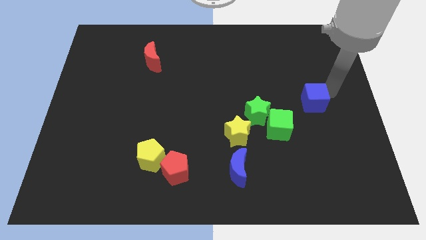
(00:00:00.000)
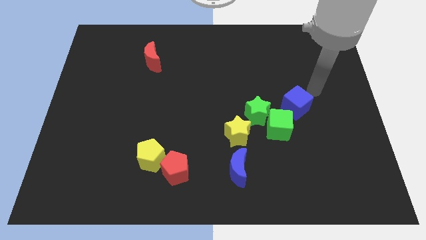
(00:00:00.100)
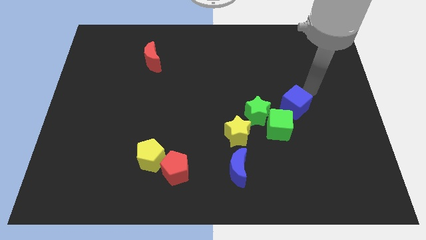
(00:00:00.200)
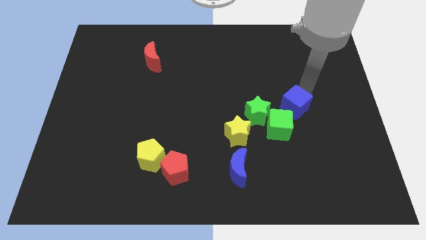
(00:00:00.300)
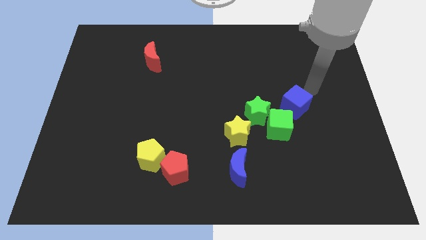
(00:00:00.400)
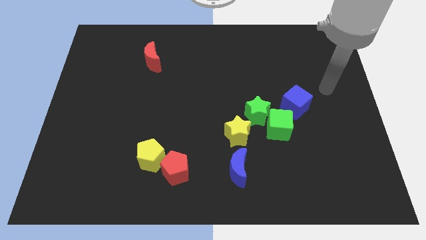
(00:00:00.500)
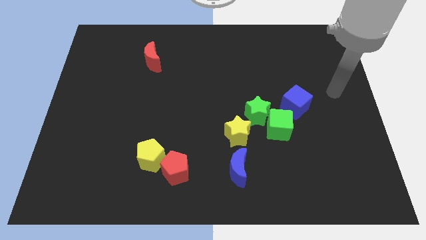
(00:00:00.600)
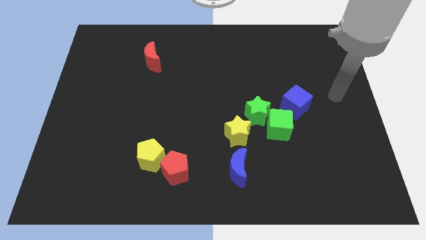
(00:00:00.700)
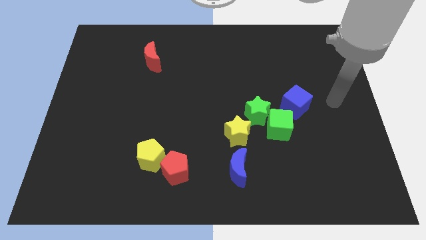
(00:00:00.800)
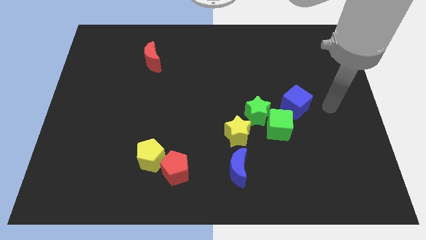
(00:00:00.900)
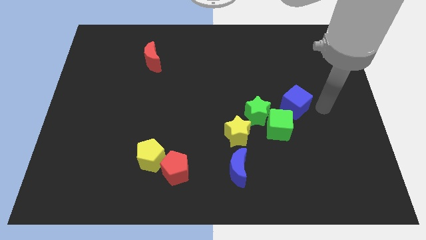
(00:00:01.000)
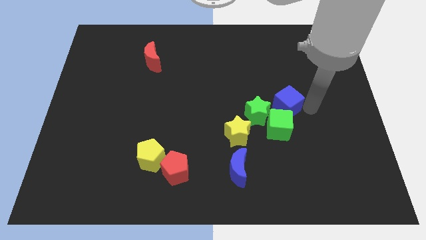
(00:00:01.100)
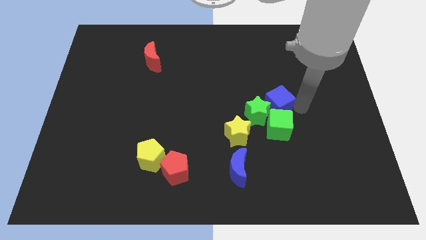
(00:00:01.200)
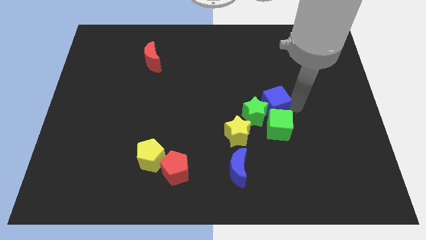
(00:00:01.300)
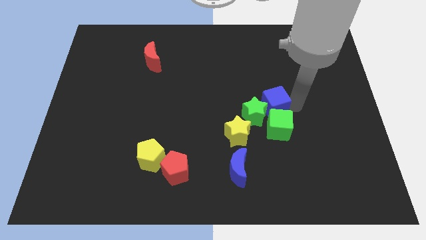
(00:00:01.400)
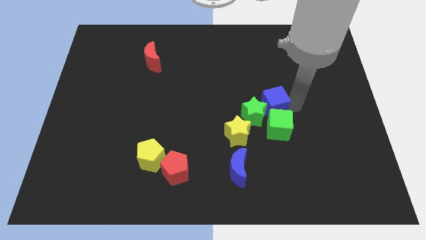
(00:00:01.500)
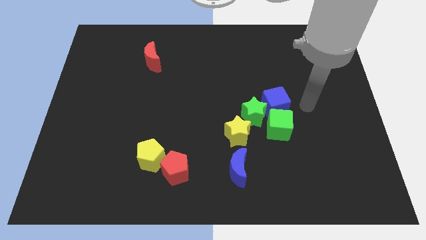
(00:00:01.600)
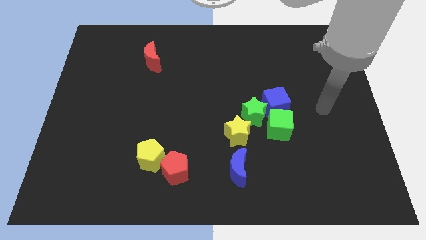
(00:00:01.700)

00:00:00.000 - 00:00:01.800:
place the blue cube above the green cube

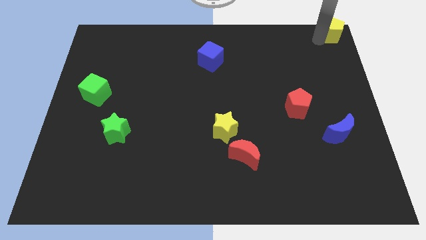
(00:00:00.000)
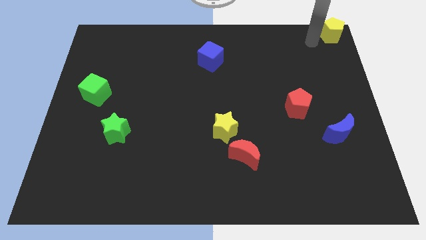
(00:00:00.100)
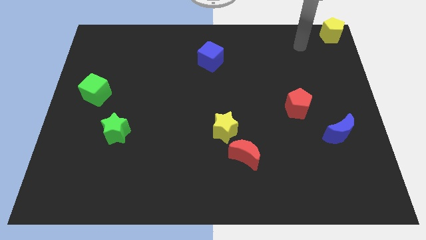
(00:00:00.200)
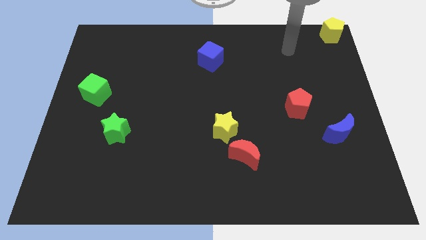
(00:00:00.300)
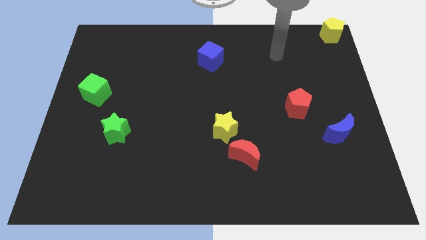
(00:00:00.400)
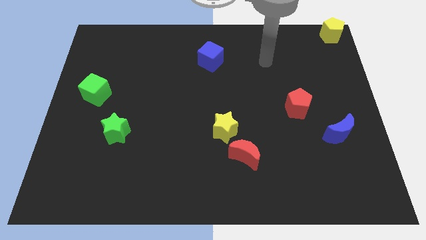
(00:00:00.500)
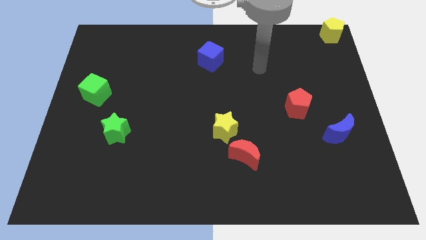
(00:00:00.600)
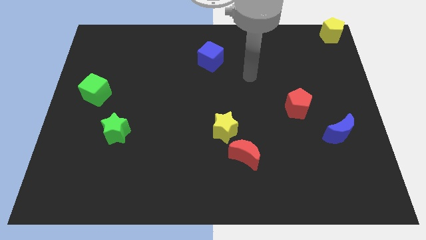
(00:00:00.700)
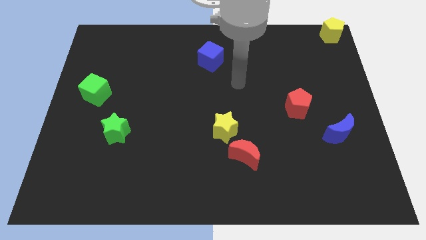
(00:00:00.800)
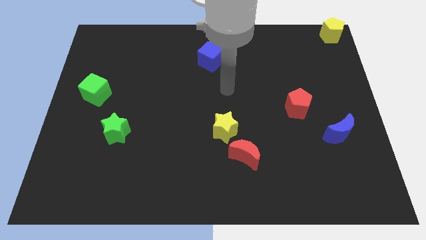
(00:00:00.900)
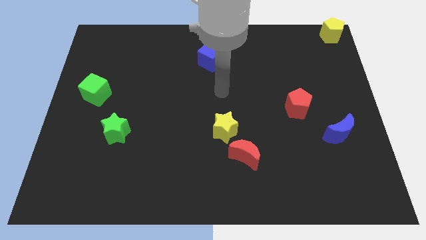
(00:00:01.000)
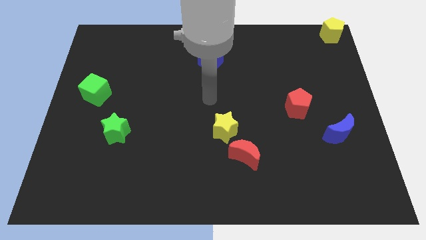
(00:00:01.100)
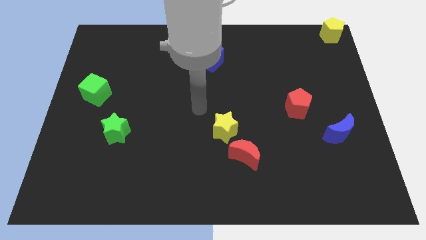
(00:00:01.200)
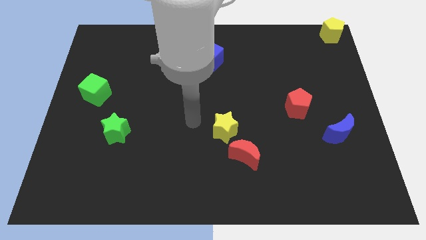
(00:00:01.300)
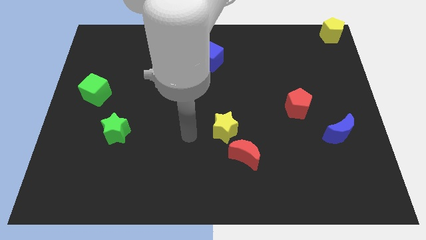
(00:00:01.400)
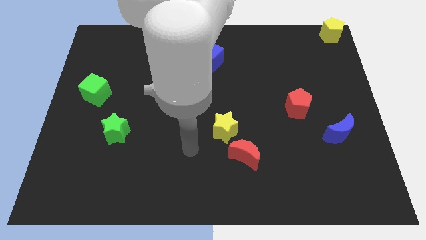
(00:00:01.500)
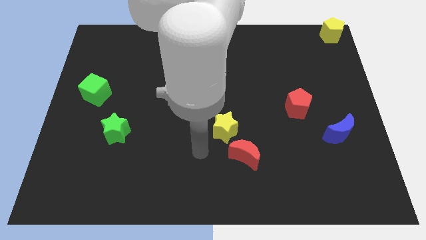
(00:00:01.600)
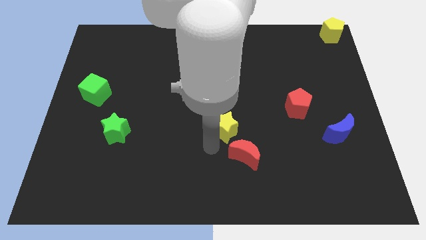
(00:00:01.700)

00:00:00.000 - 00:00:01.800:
move your arm towards the bottom of the yellow star

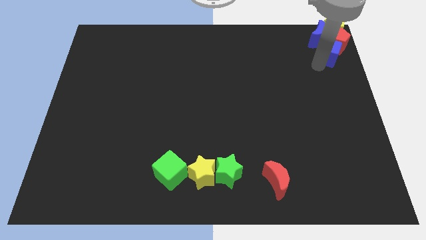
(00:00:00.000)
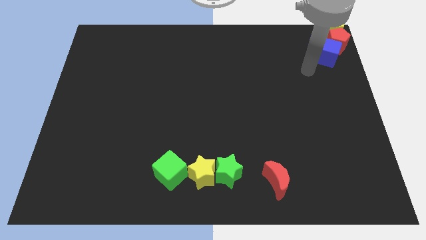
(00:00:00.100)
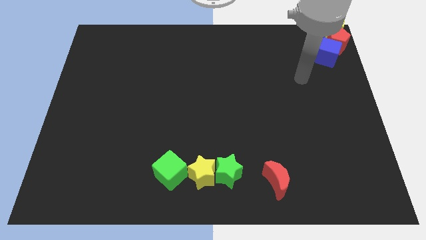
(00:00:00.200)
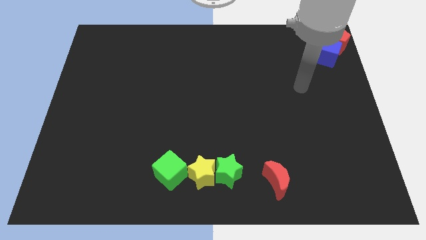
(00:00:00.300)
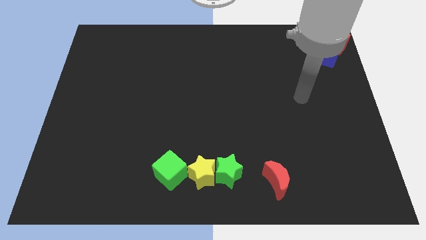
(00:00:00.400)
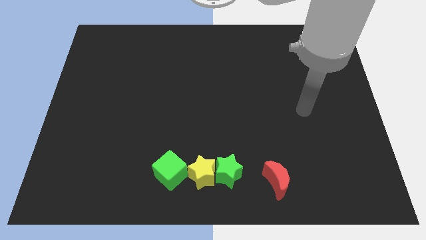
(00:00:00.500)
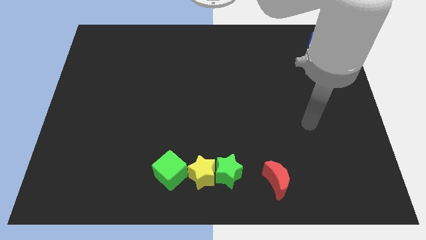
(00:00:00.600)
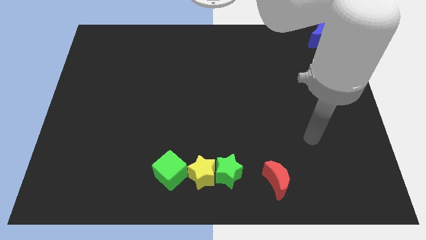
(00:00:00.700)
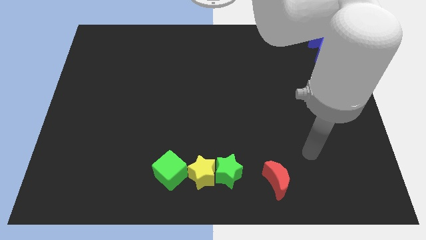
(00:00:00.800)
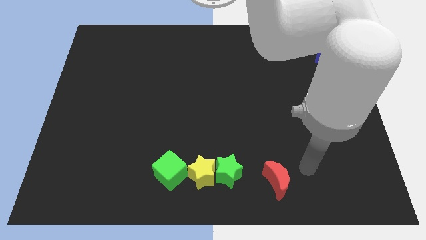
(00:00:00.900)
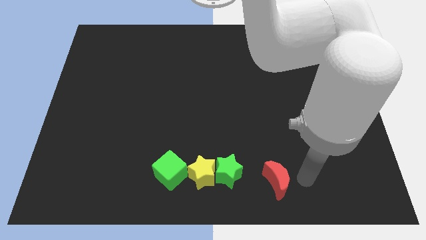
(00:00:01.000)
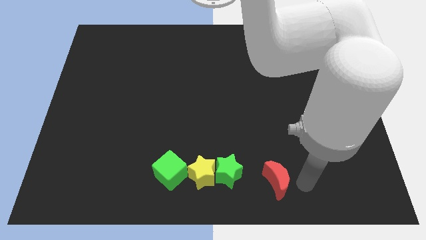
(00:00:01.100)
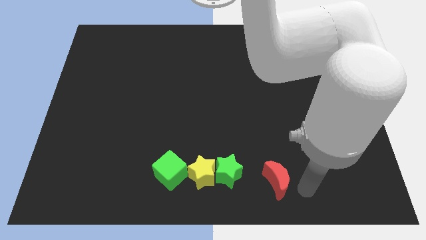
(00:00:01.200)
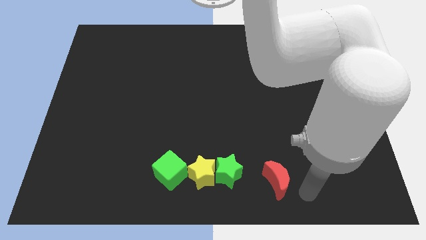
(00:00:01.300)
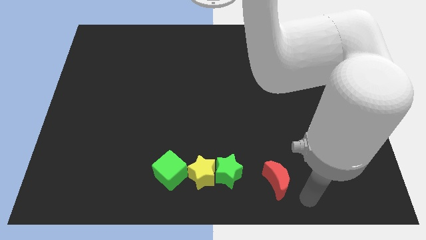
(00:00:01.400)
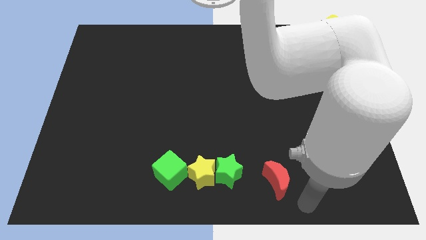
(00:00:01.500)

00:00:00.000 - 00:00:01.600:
move the arm away from the blue cube

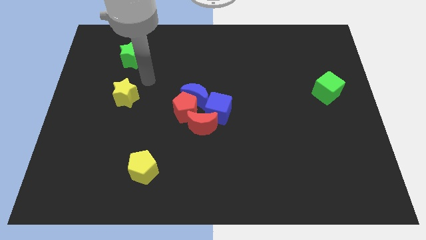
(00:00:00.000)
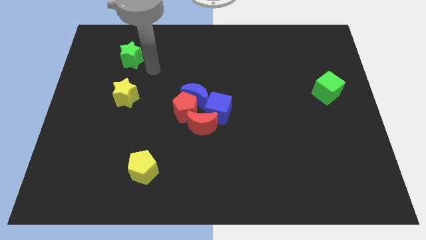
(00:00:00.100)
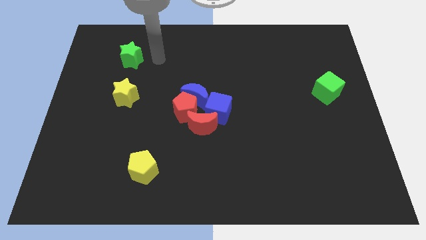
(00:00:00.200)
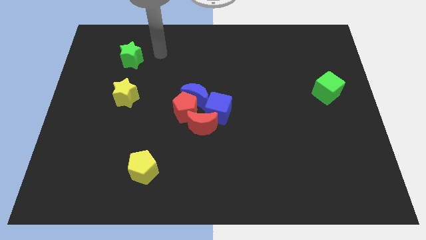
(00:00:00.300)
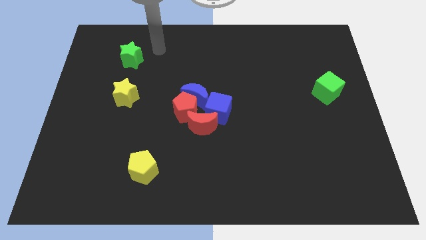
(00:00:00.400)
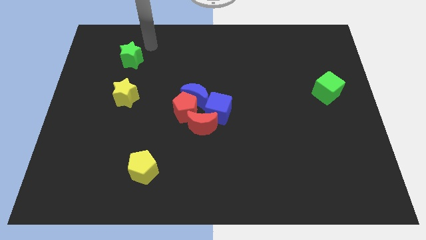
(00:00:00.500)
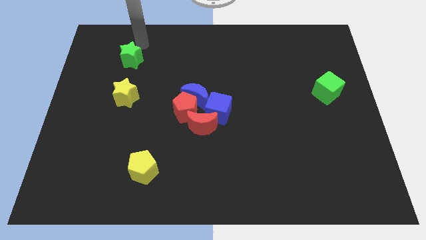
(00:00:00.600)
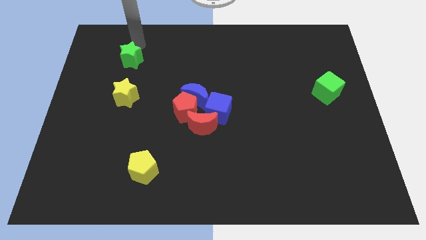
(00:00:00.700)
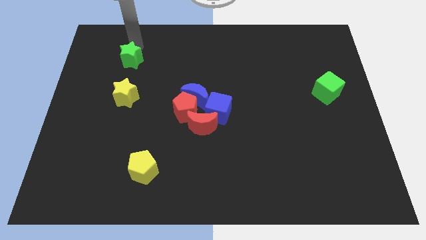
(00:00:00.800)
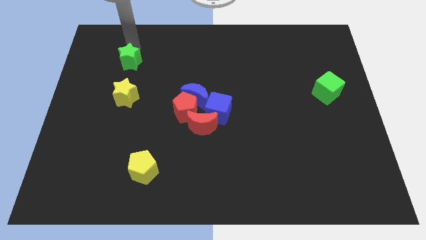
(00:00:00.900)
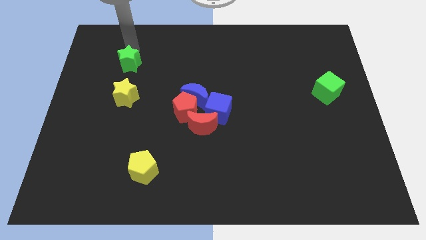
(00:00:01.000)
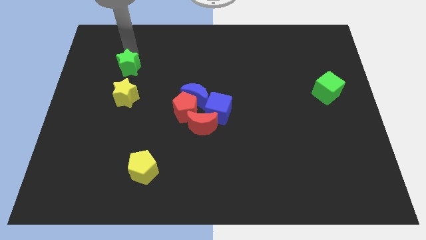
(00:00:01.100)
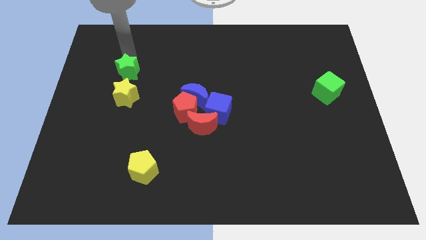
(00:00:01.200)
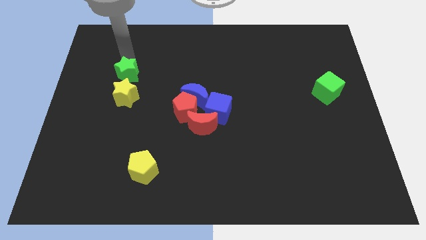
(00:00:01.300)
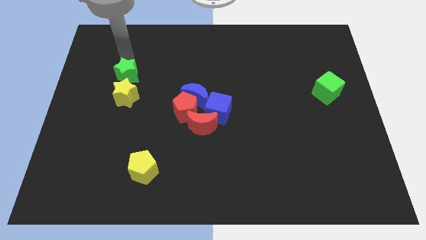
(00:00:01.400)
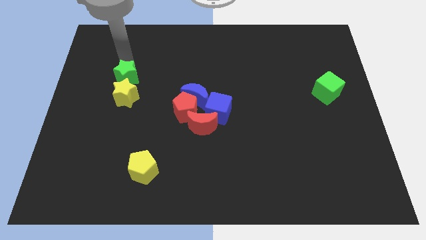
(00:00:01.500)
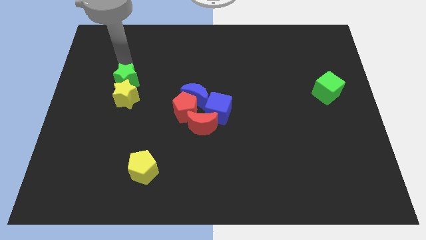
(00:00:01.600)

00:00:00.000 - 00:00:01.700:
push the green star into the yellow star

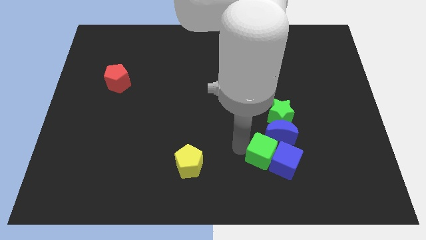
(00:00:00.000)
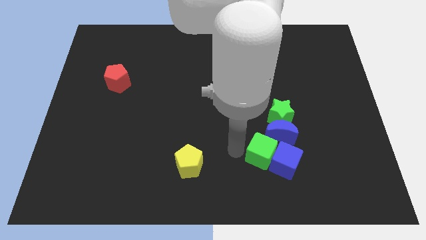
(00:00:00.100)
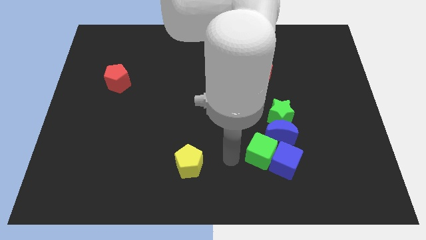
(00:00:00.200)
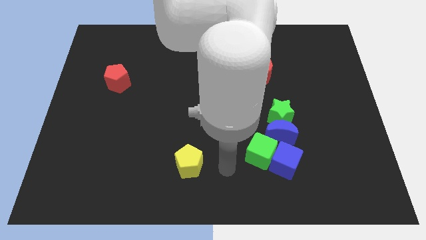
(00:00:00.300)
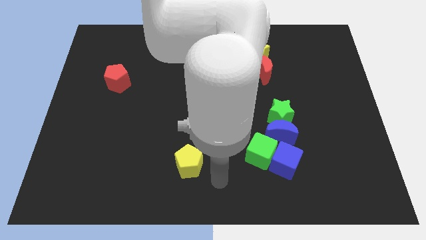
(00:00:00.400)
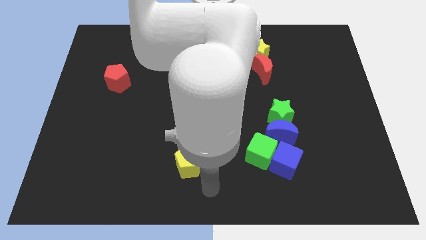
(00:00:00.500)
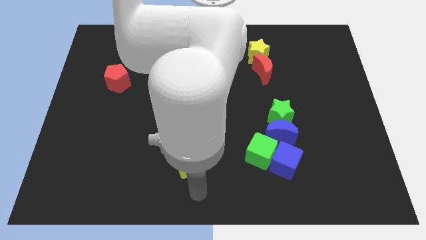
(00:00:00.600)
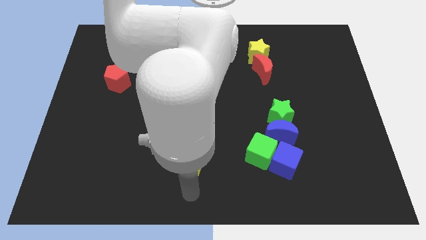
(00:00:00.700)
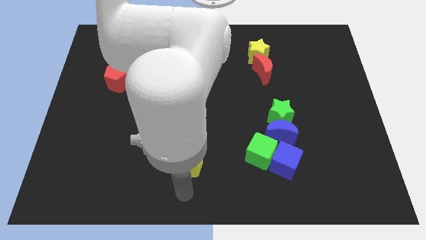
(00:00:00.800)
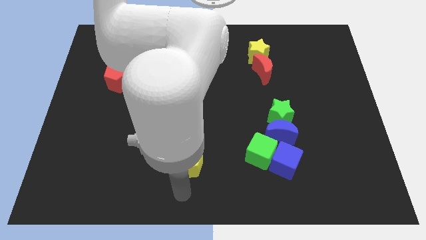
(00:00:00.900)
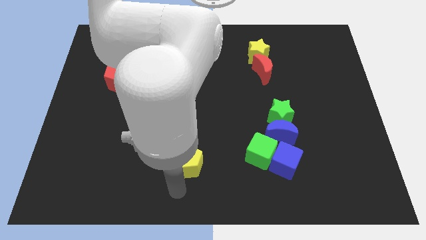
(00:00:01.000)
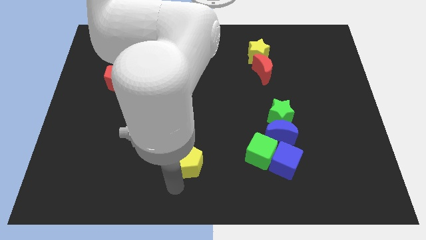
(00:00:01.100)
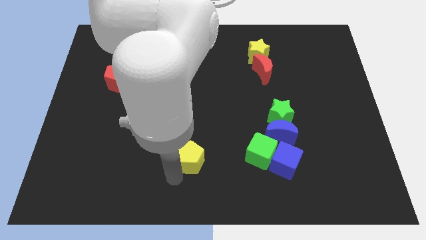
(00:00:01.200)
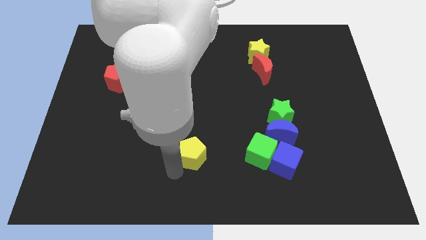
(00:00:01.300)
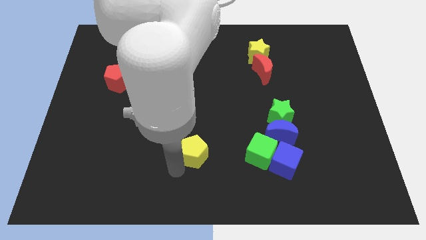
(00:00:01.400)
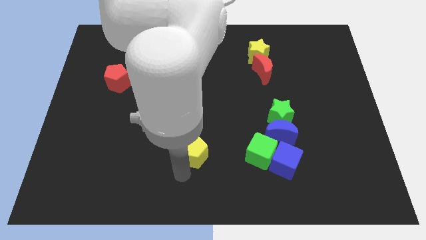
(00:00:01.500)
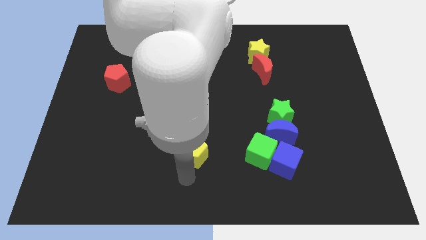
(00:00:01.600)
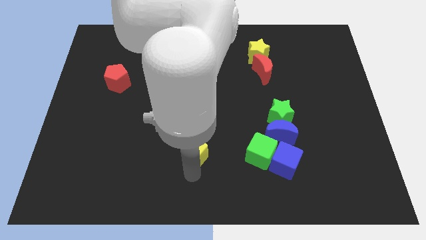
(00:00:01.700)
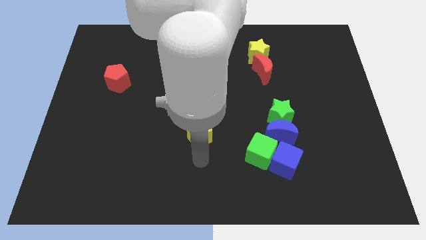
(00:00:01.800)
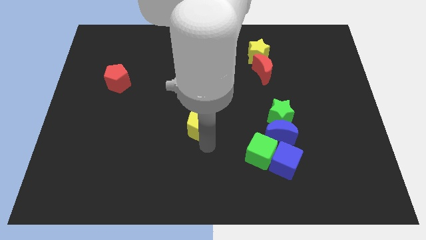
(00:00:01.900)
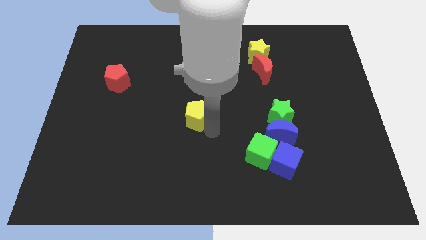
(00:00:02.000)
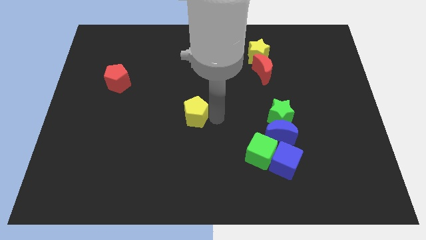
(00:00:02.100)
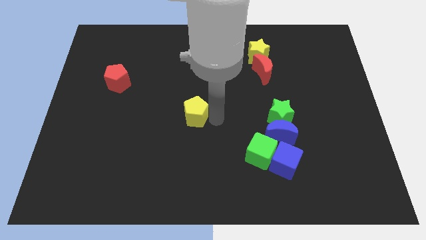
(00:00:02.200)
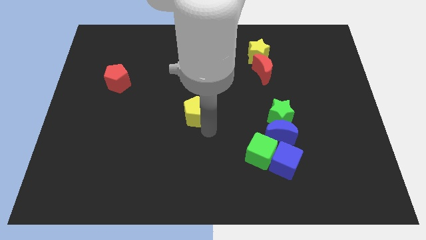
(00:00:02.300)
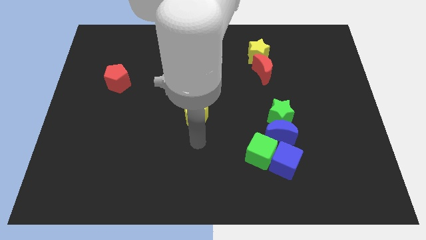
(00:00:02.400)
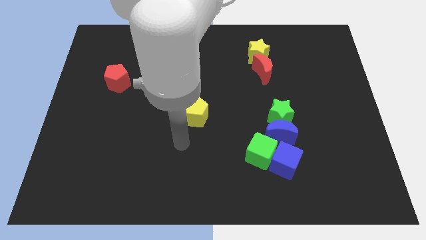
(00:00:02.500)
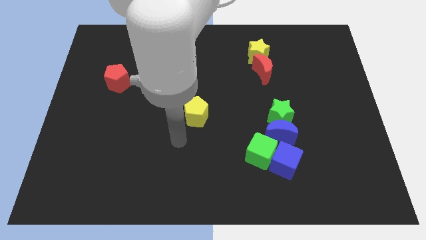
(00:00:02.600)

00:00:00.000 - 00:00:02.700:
move the yellow pentagon to the centre of the board
